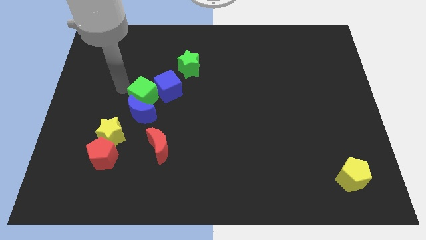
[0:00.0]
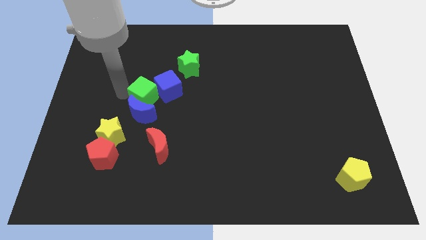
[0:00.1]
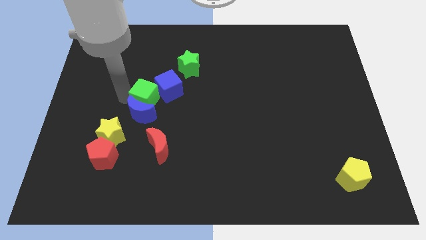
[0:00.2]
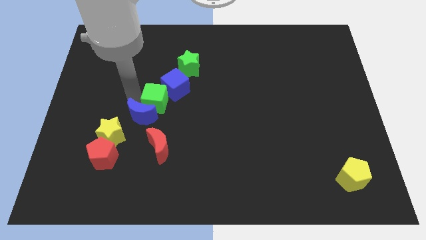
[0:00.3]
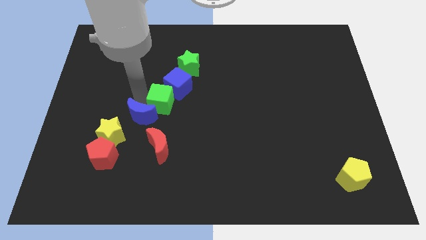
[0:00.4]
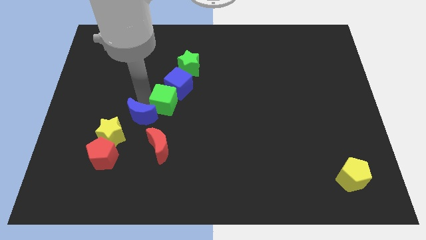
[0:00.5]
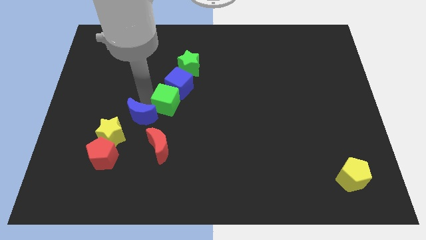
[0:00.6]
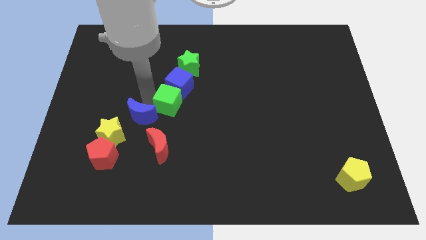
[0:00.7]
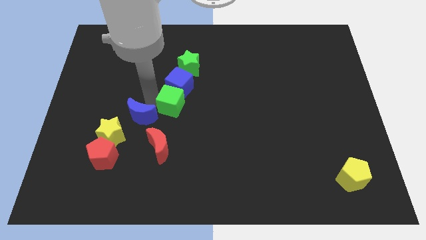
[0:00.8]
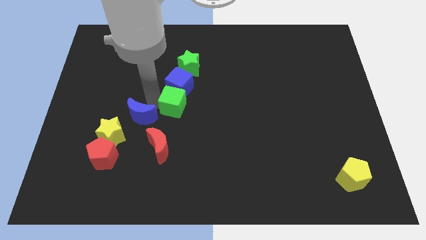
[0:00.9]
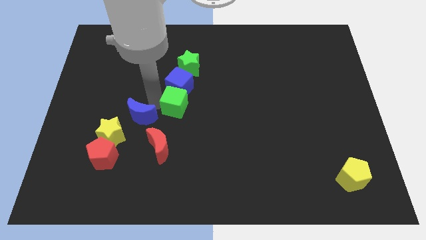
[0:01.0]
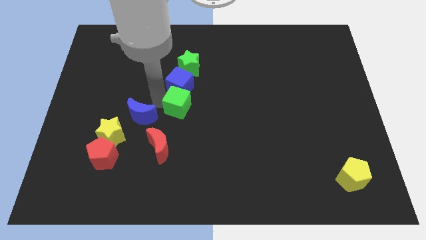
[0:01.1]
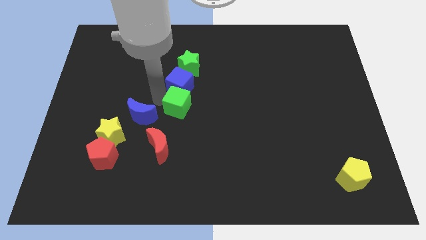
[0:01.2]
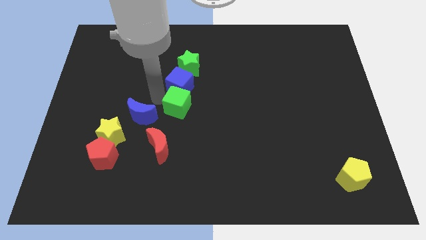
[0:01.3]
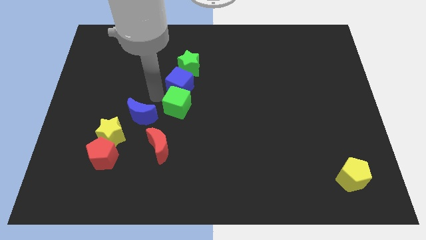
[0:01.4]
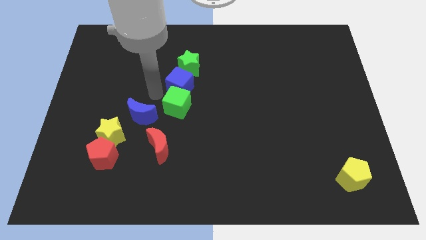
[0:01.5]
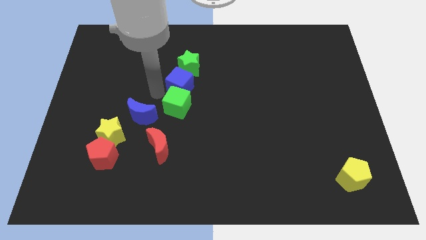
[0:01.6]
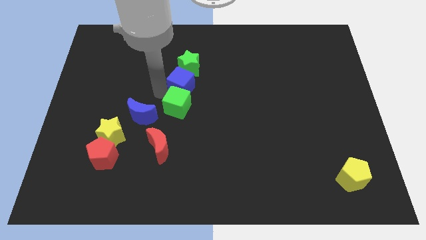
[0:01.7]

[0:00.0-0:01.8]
move green cube below the blue cube

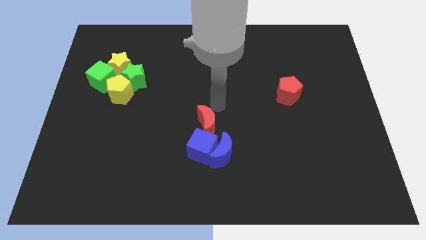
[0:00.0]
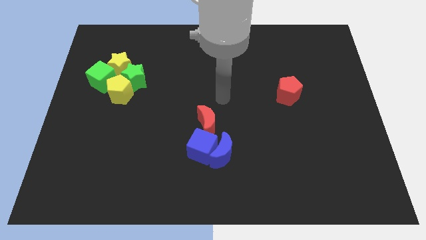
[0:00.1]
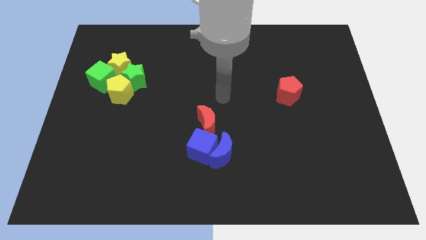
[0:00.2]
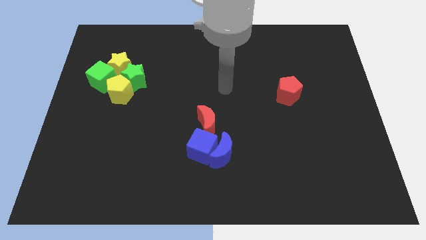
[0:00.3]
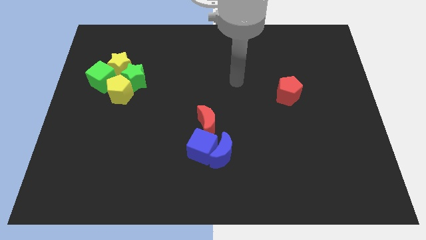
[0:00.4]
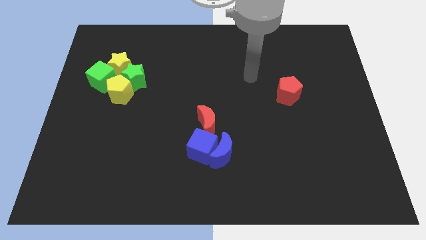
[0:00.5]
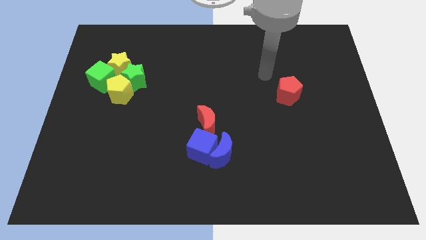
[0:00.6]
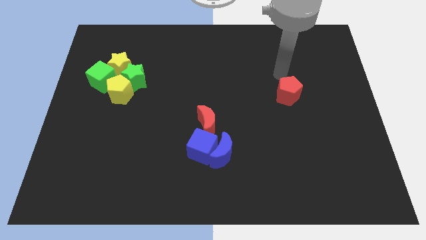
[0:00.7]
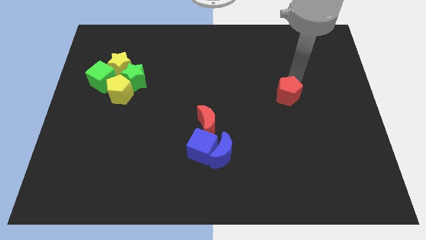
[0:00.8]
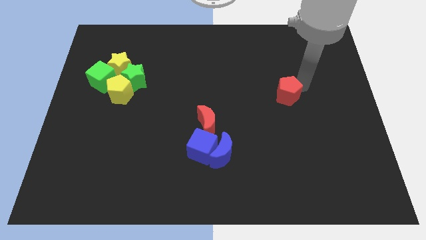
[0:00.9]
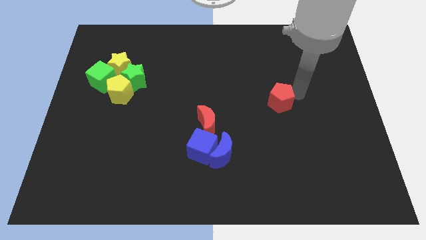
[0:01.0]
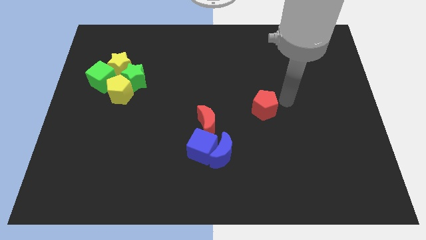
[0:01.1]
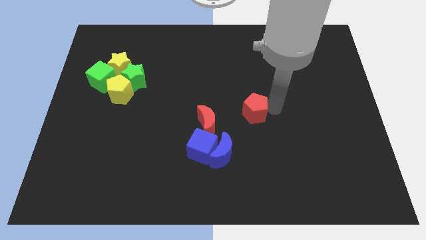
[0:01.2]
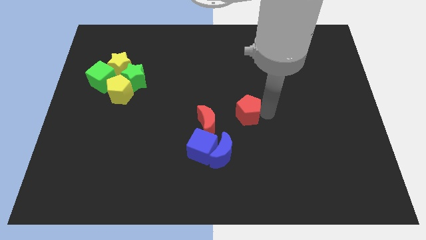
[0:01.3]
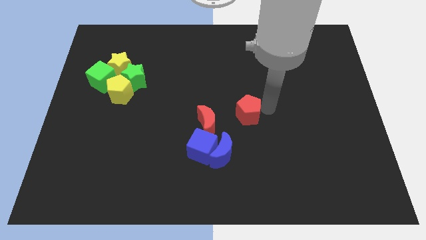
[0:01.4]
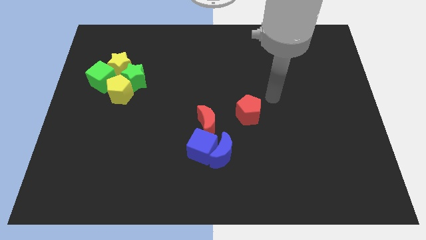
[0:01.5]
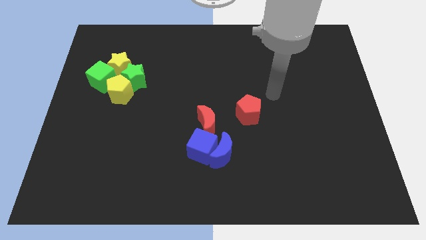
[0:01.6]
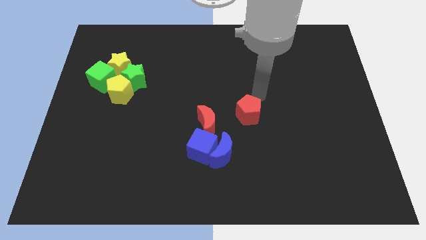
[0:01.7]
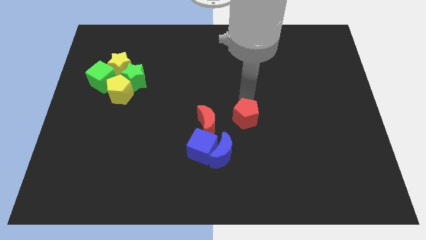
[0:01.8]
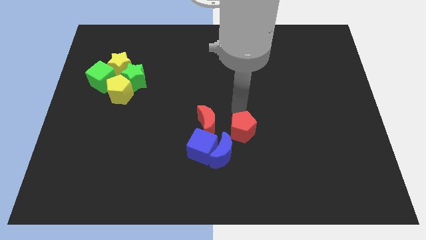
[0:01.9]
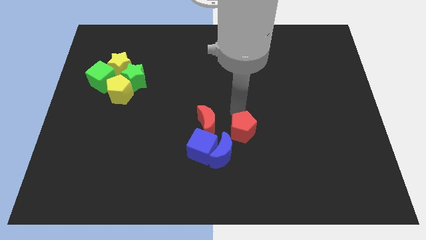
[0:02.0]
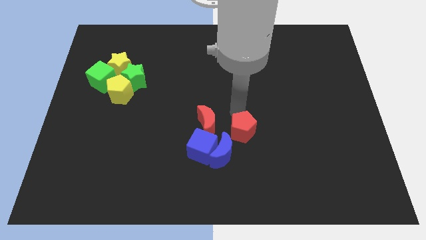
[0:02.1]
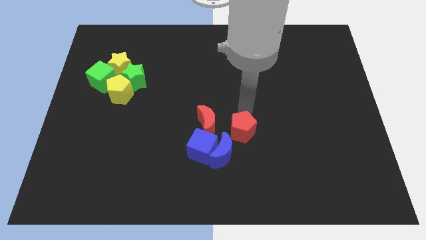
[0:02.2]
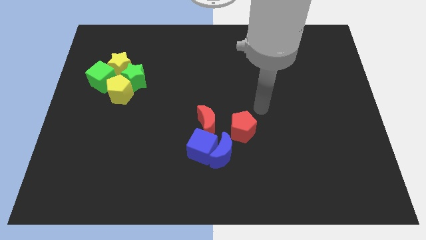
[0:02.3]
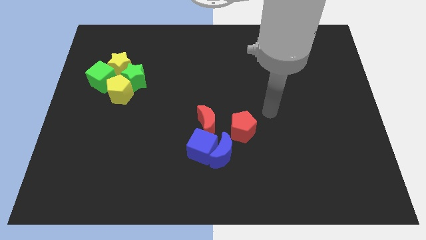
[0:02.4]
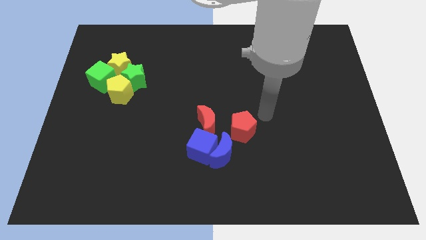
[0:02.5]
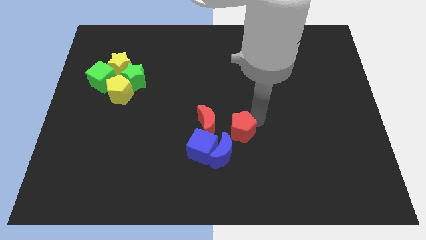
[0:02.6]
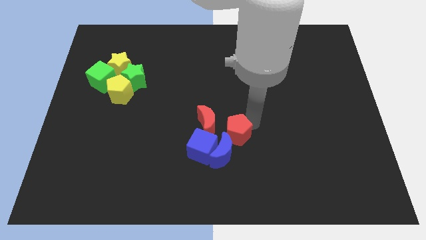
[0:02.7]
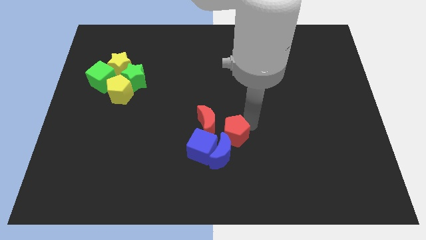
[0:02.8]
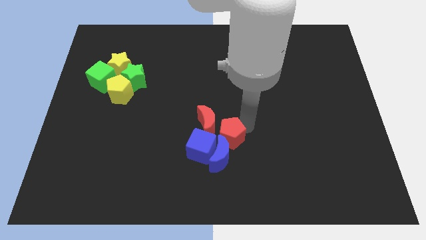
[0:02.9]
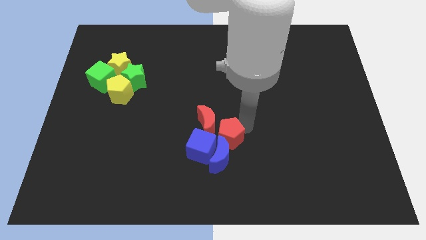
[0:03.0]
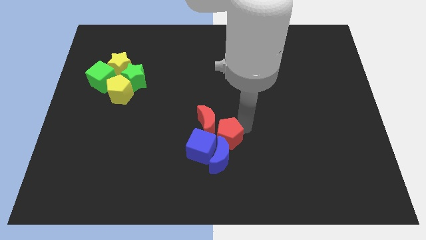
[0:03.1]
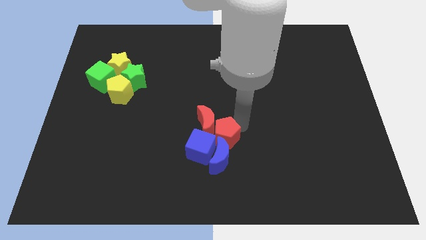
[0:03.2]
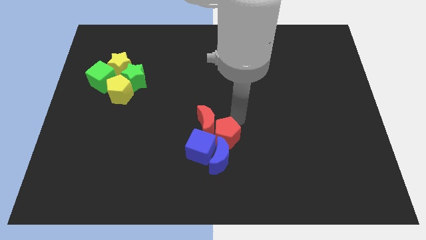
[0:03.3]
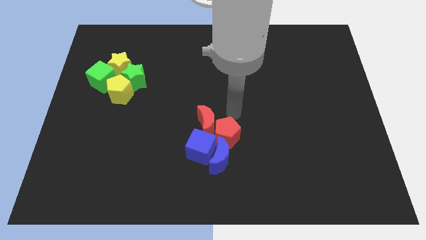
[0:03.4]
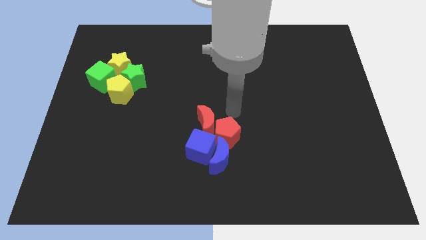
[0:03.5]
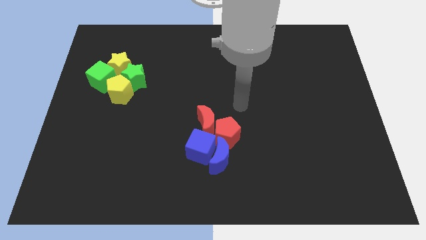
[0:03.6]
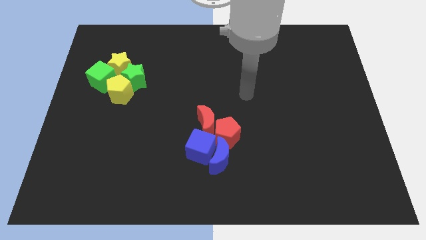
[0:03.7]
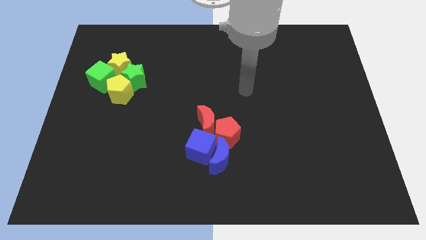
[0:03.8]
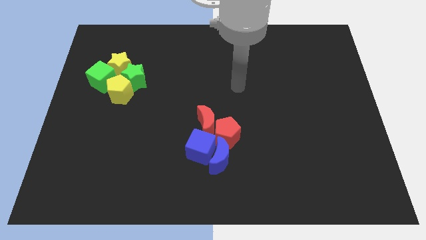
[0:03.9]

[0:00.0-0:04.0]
slide the red pentagon into the top of the blue moon

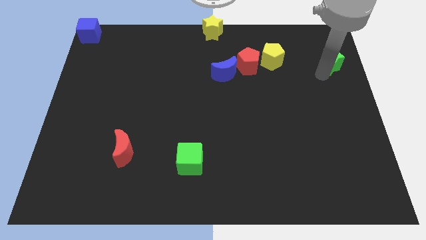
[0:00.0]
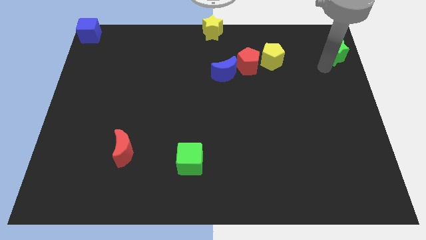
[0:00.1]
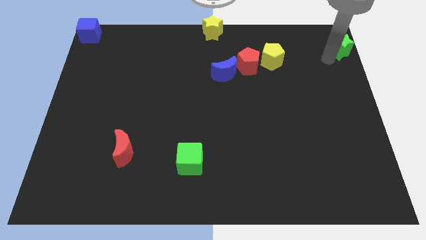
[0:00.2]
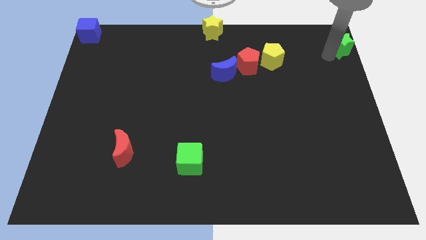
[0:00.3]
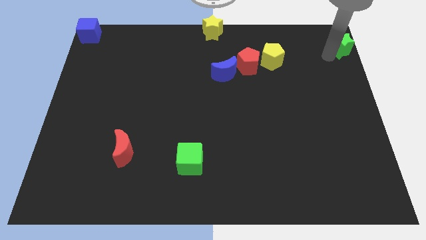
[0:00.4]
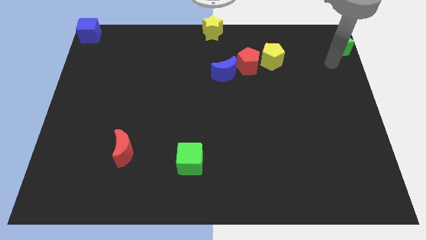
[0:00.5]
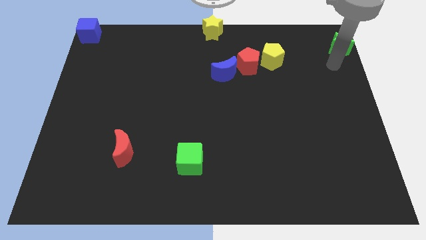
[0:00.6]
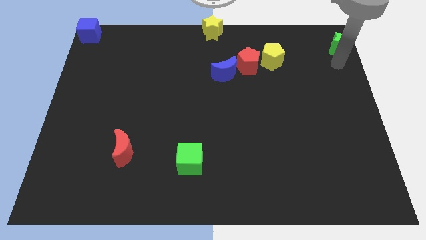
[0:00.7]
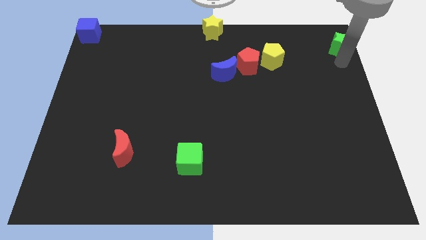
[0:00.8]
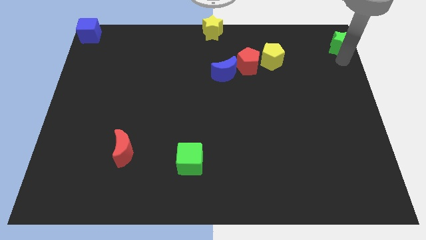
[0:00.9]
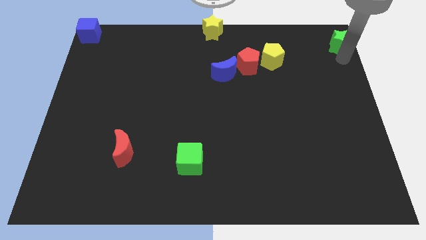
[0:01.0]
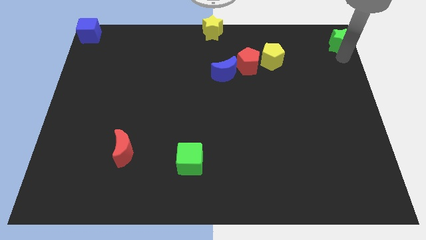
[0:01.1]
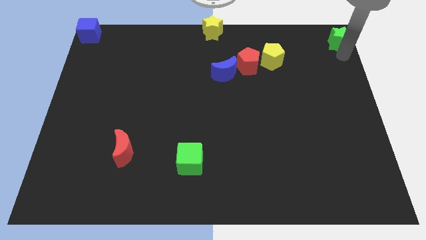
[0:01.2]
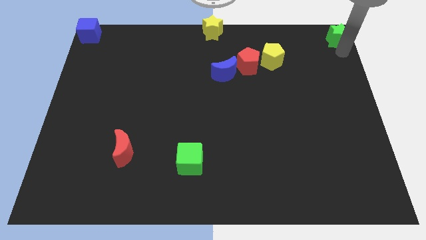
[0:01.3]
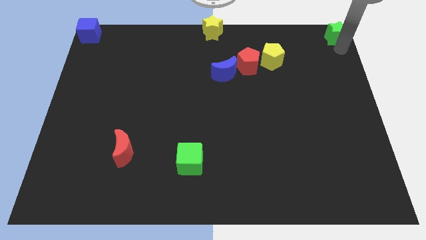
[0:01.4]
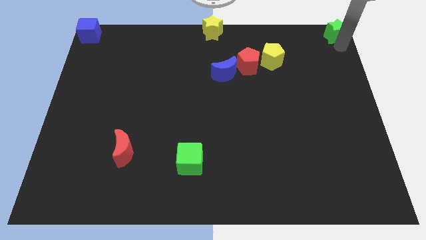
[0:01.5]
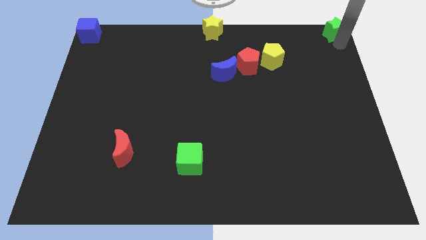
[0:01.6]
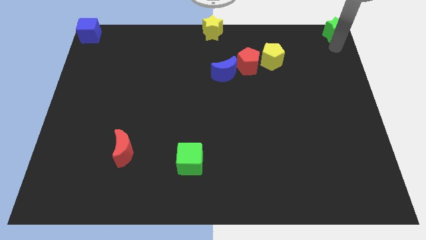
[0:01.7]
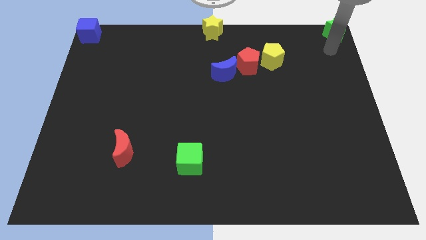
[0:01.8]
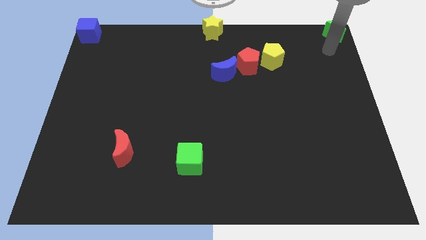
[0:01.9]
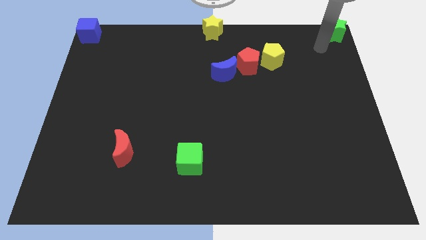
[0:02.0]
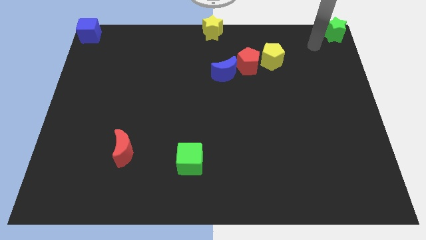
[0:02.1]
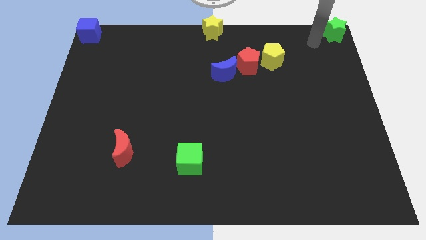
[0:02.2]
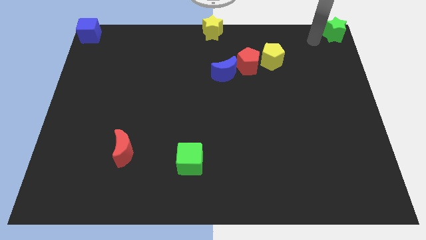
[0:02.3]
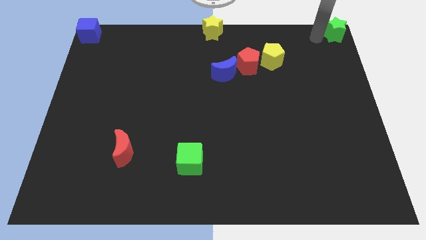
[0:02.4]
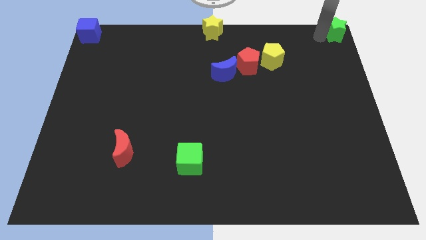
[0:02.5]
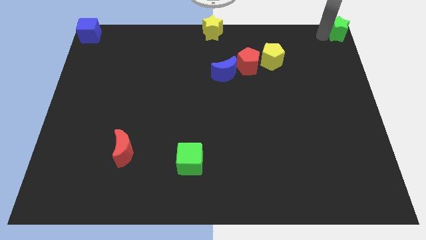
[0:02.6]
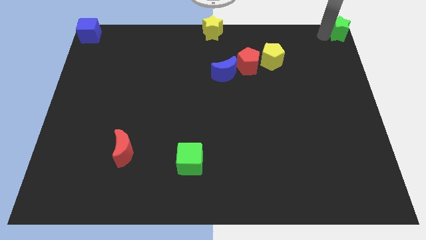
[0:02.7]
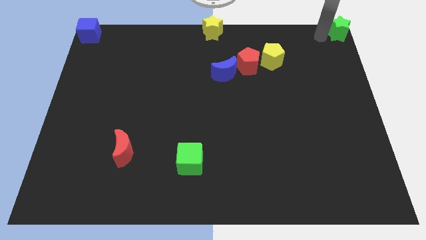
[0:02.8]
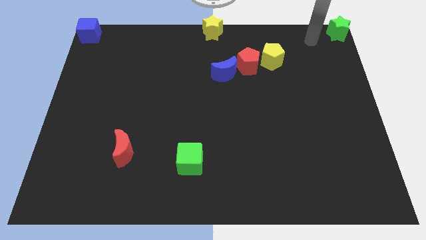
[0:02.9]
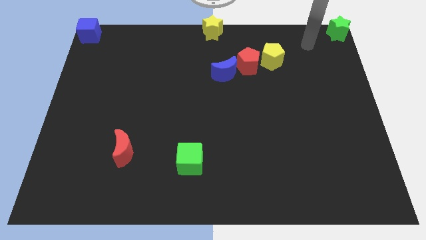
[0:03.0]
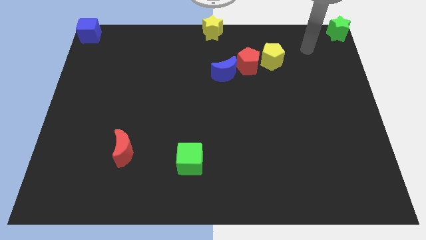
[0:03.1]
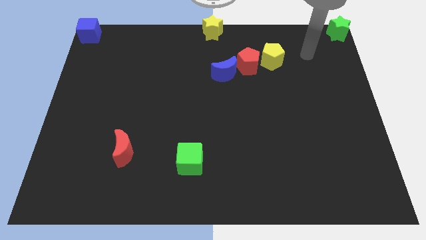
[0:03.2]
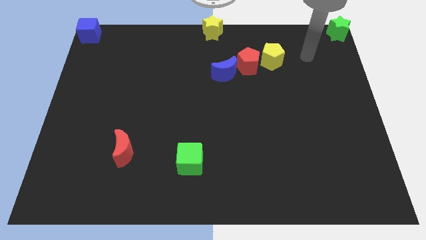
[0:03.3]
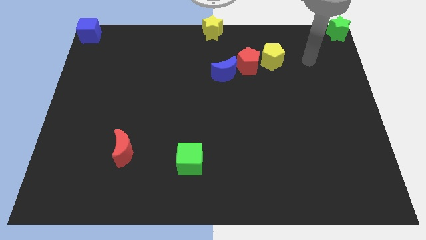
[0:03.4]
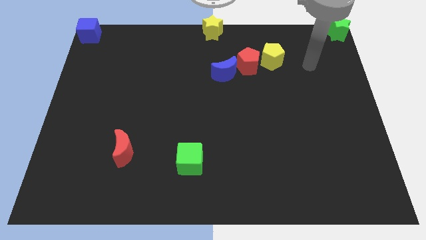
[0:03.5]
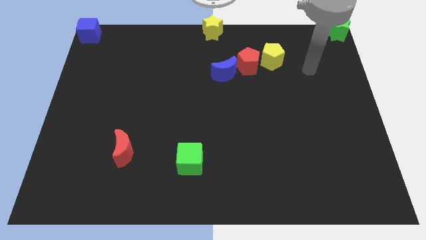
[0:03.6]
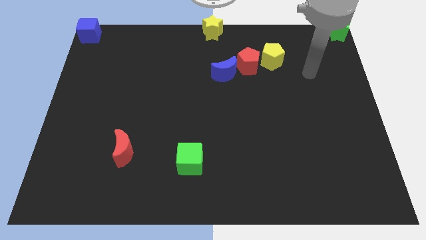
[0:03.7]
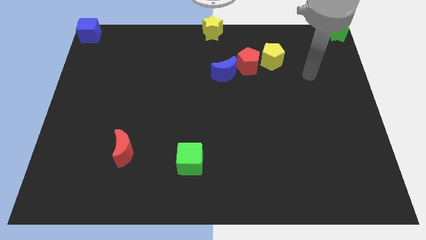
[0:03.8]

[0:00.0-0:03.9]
place the green star at right top corner of the board
